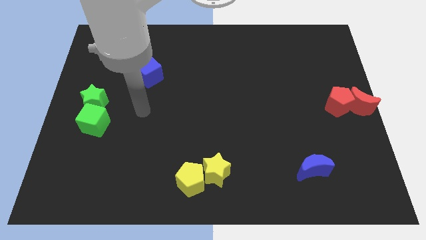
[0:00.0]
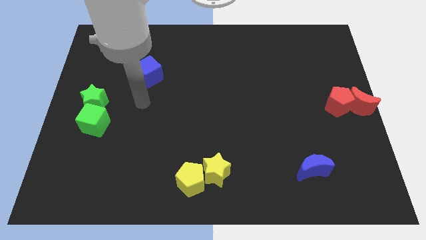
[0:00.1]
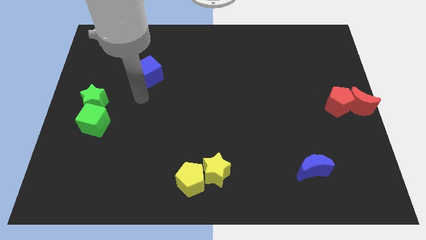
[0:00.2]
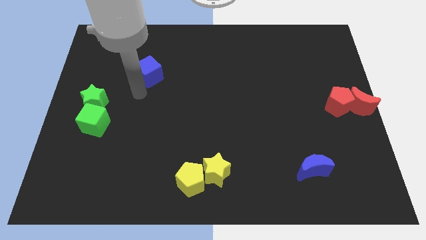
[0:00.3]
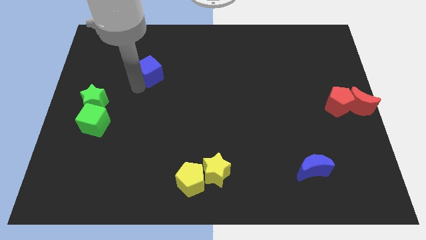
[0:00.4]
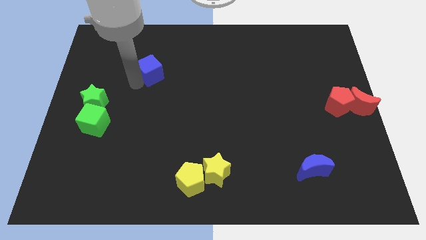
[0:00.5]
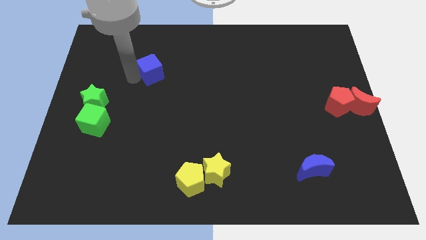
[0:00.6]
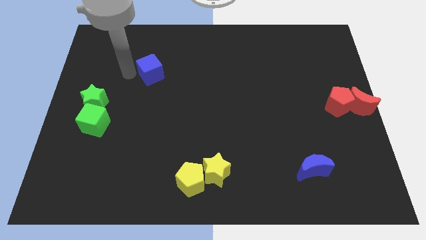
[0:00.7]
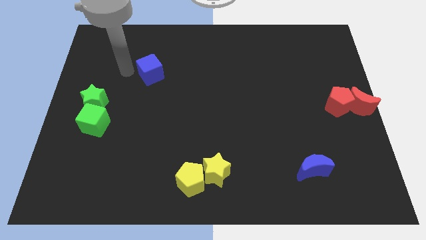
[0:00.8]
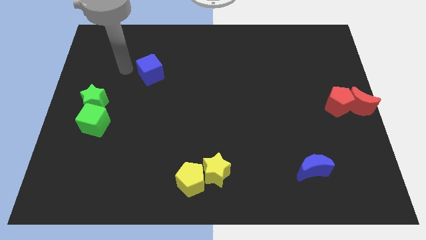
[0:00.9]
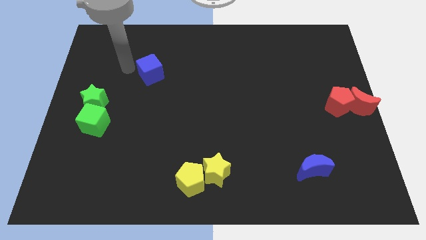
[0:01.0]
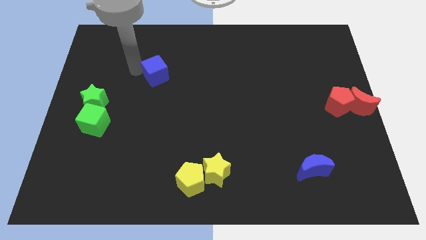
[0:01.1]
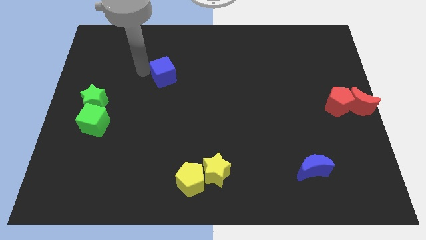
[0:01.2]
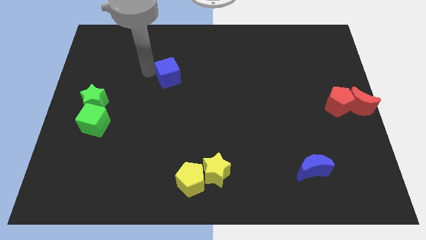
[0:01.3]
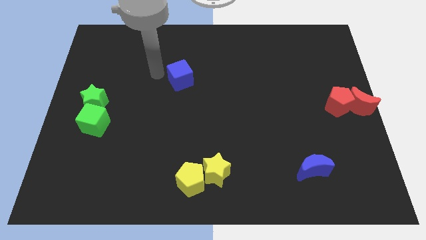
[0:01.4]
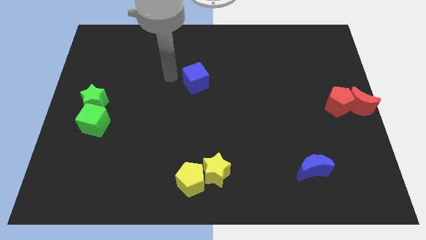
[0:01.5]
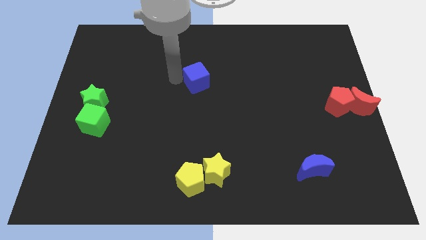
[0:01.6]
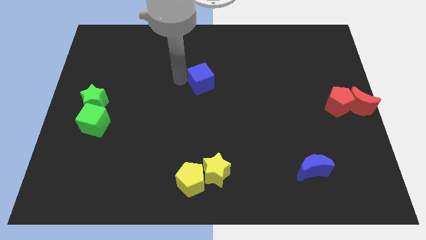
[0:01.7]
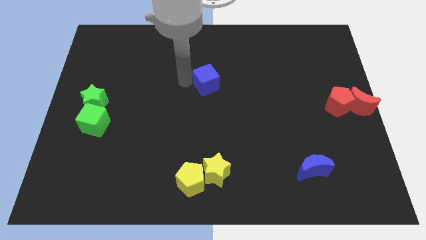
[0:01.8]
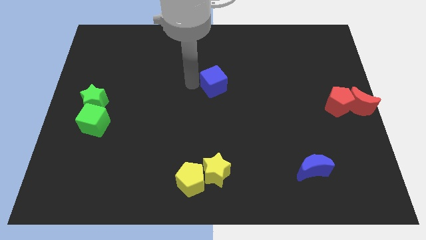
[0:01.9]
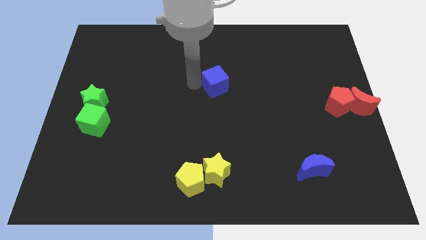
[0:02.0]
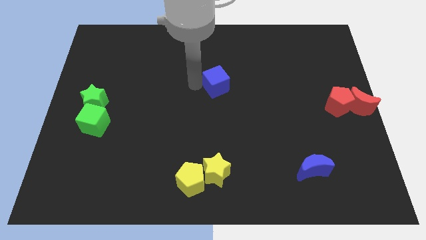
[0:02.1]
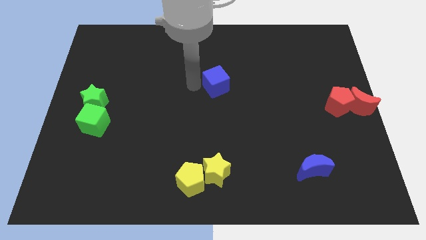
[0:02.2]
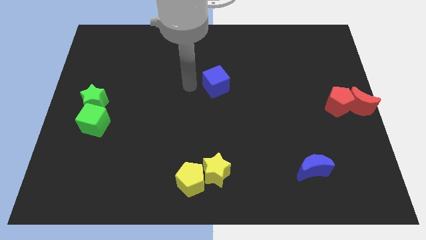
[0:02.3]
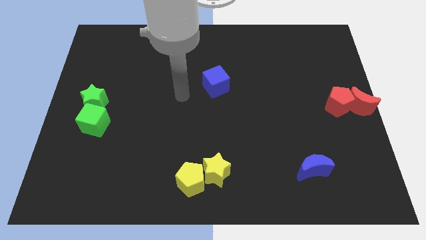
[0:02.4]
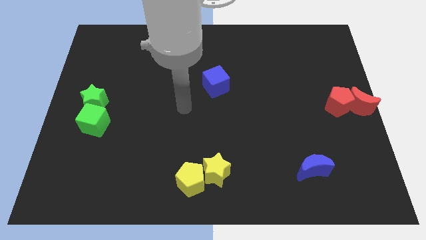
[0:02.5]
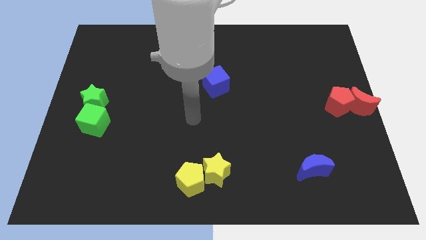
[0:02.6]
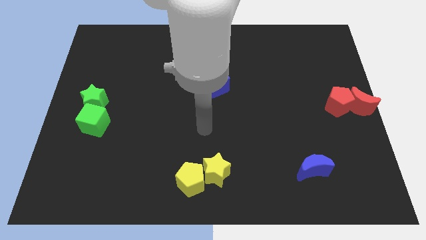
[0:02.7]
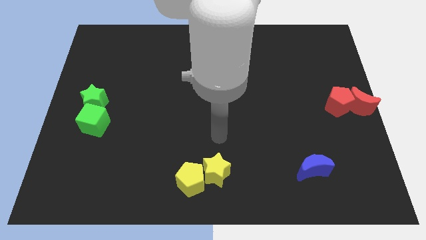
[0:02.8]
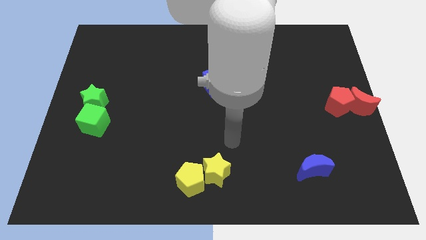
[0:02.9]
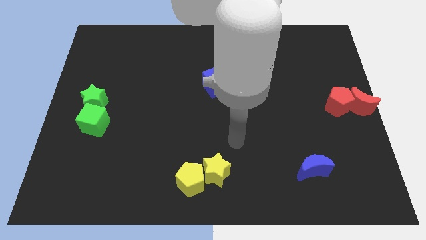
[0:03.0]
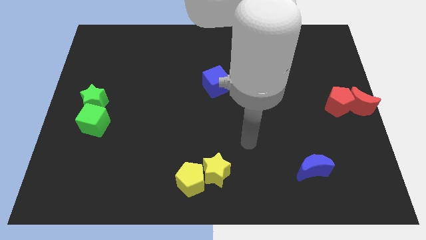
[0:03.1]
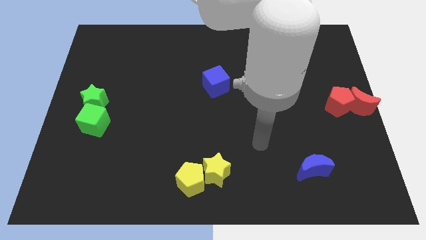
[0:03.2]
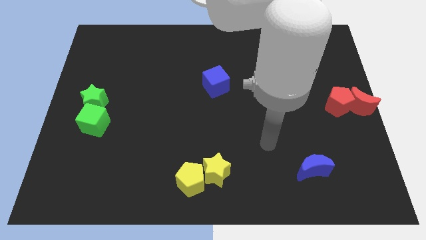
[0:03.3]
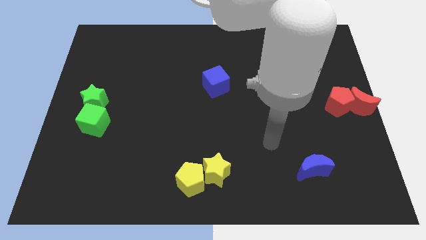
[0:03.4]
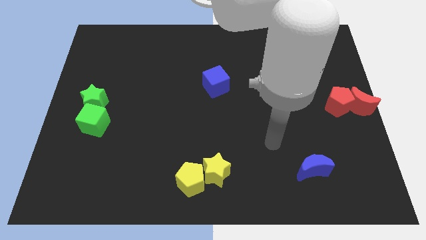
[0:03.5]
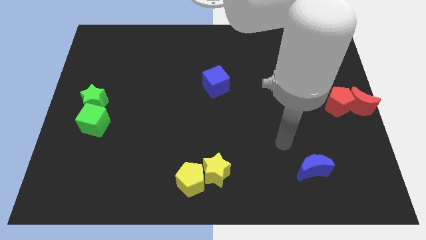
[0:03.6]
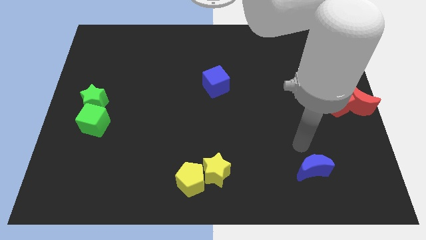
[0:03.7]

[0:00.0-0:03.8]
slide the blue cube to the center of the board

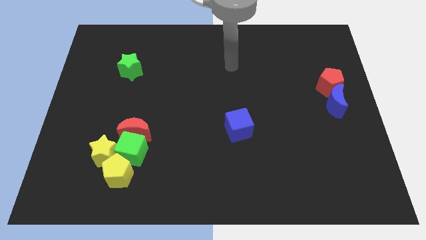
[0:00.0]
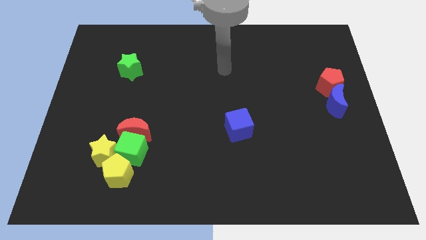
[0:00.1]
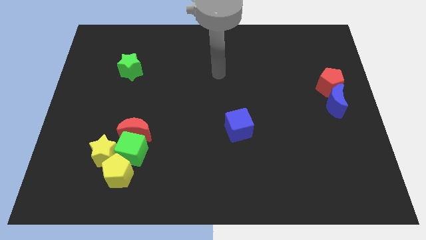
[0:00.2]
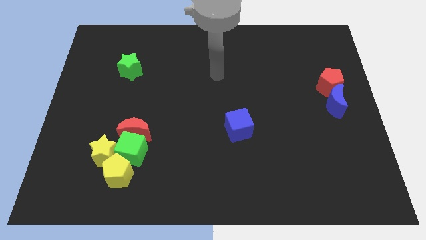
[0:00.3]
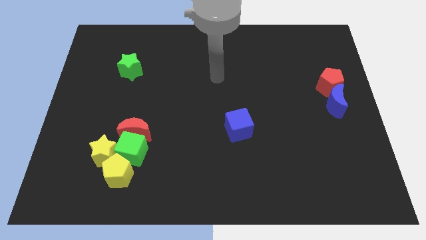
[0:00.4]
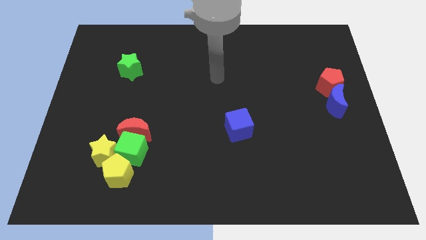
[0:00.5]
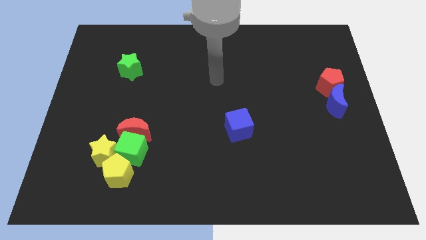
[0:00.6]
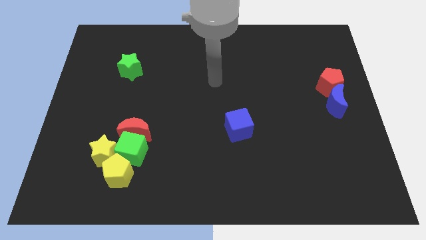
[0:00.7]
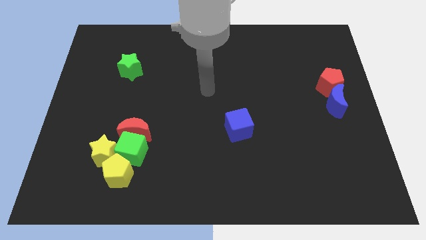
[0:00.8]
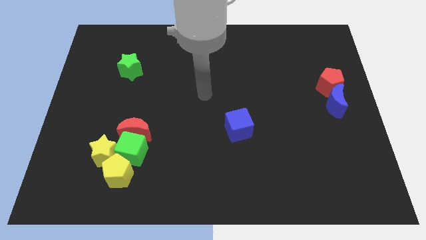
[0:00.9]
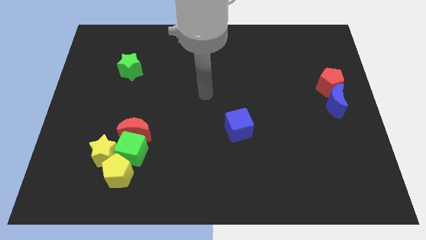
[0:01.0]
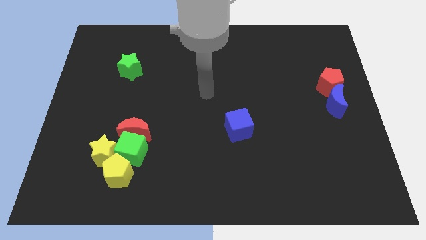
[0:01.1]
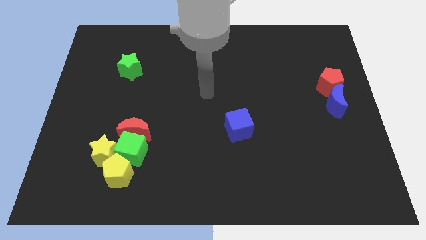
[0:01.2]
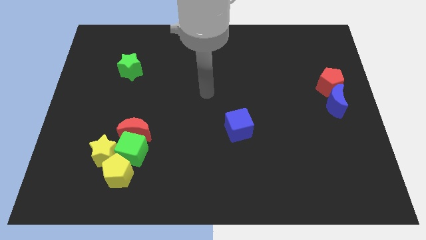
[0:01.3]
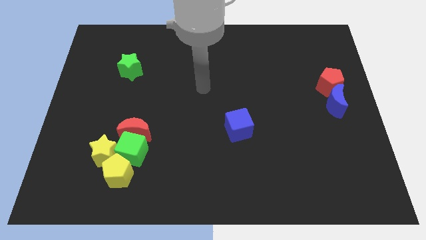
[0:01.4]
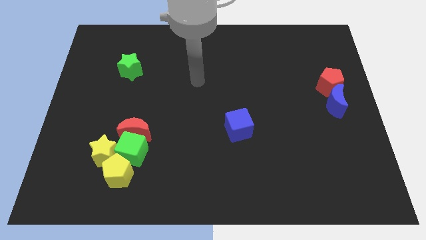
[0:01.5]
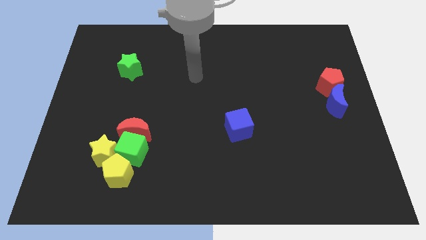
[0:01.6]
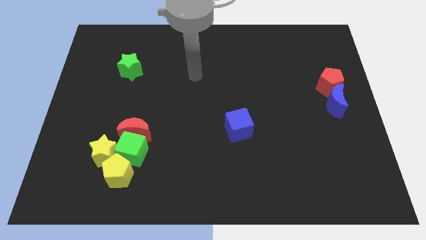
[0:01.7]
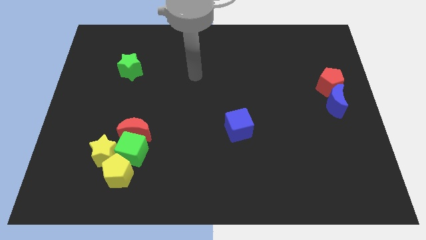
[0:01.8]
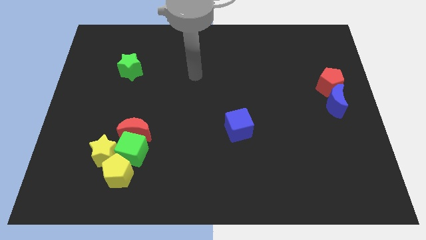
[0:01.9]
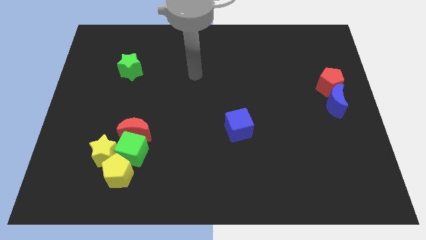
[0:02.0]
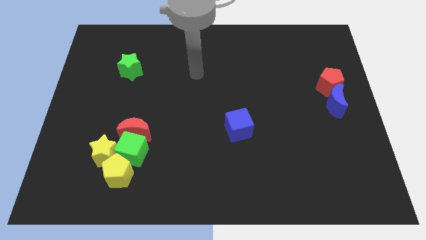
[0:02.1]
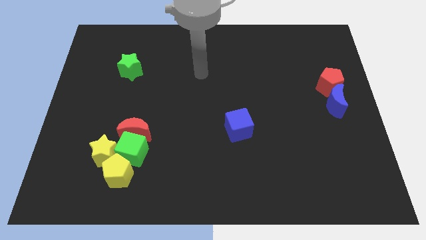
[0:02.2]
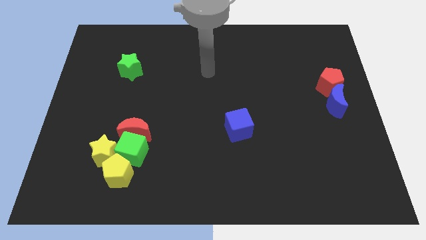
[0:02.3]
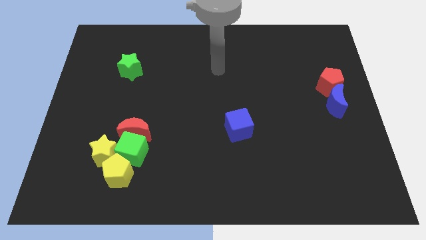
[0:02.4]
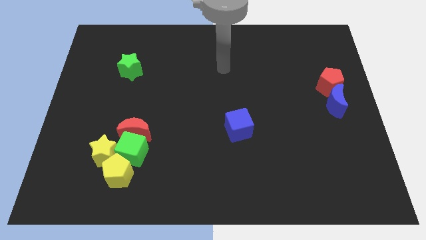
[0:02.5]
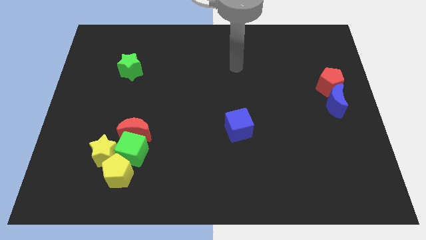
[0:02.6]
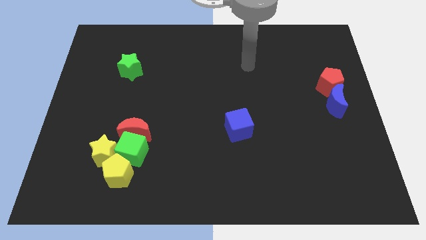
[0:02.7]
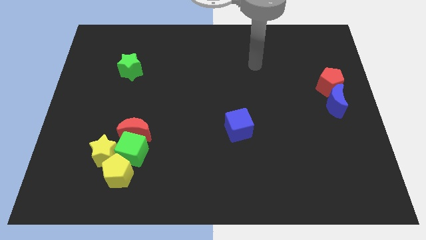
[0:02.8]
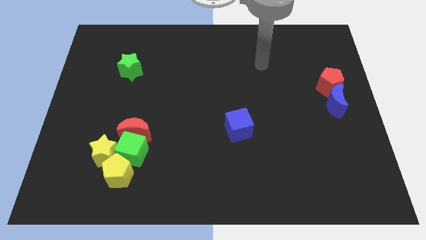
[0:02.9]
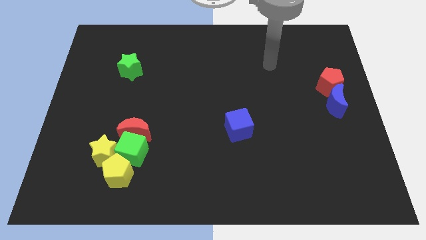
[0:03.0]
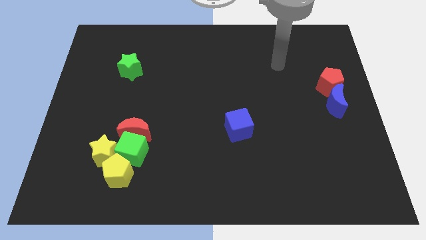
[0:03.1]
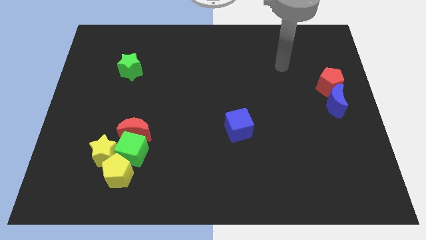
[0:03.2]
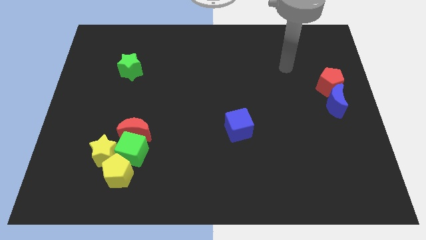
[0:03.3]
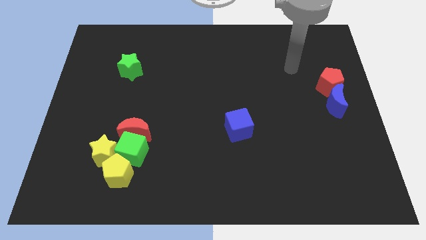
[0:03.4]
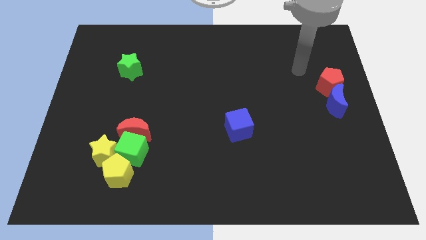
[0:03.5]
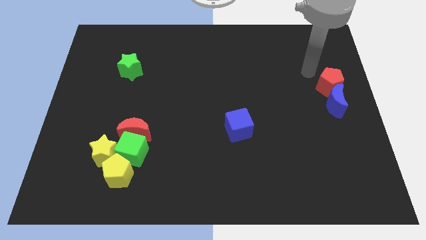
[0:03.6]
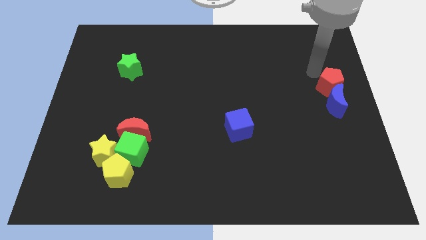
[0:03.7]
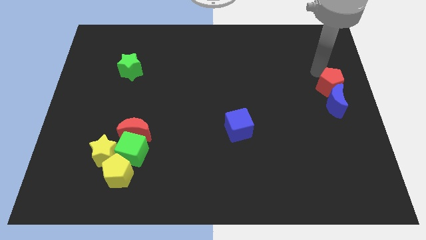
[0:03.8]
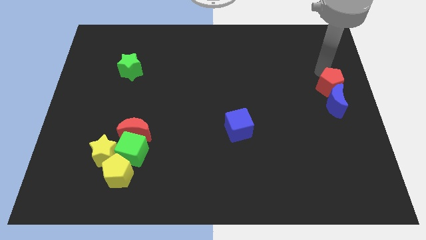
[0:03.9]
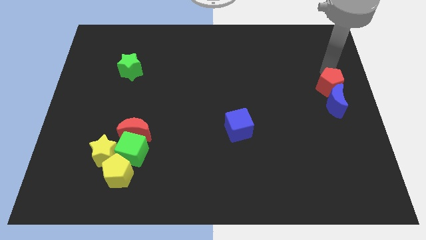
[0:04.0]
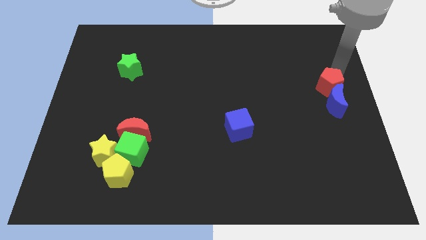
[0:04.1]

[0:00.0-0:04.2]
place the arm above the red pentagon

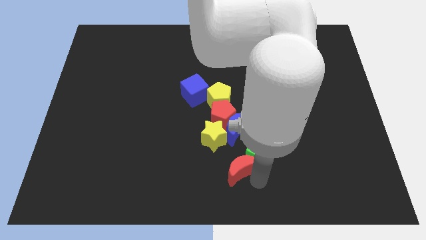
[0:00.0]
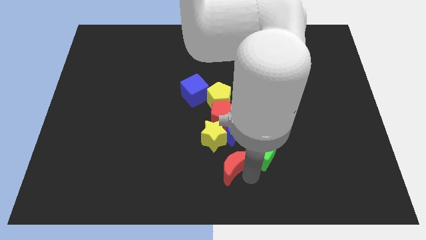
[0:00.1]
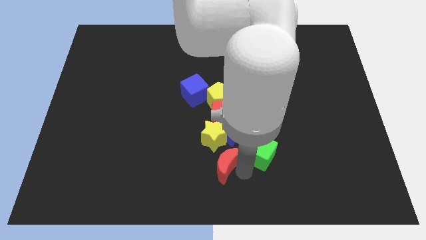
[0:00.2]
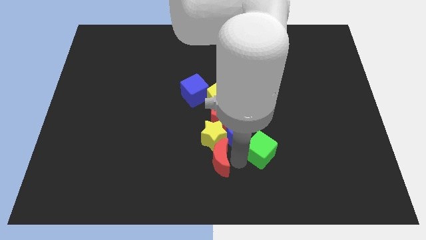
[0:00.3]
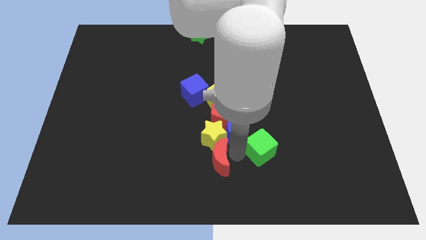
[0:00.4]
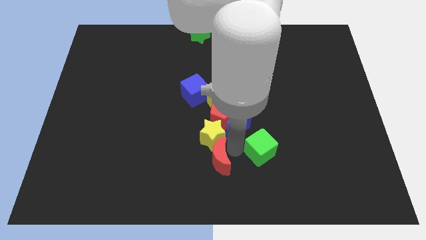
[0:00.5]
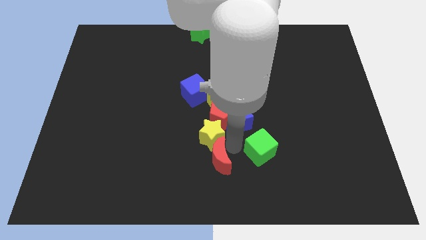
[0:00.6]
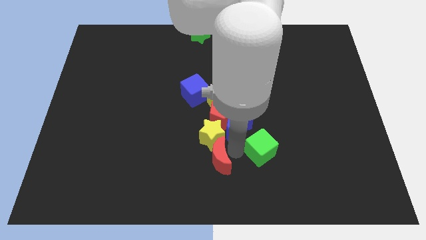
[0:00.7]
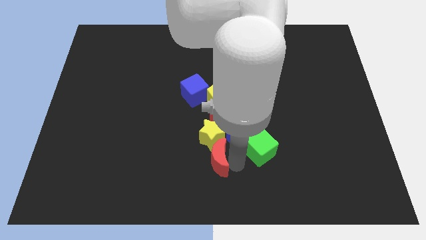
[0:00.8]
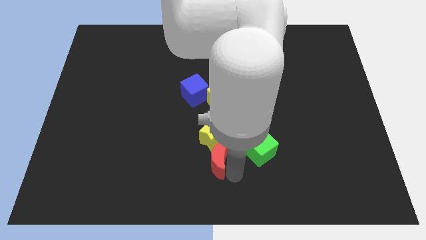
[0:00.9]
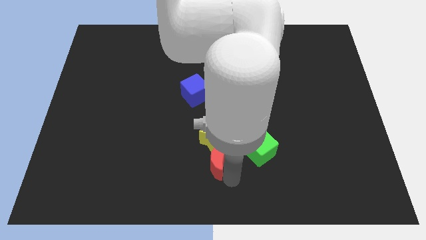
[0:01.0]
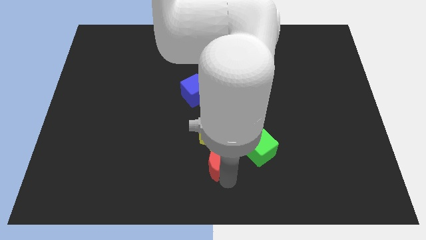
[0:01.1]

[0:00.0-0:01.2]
place the red crescent below the yellow star
